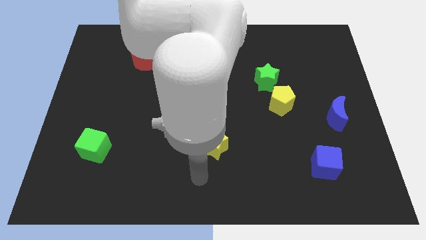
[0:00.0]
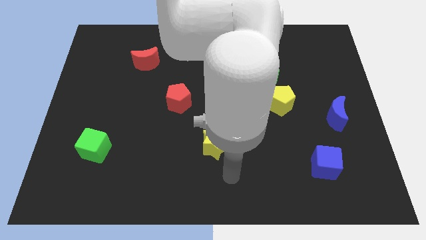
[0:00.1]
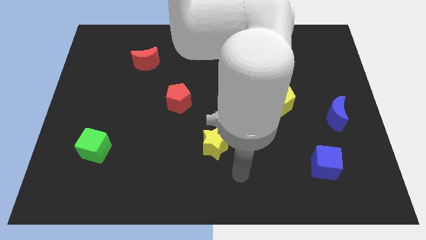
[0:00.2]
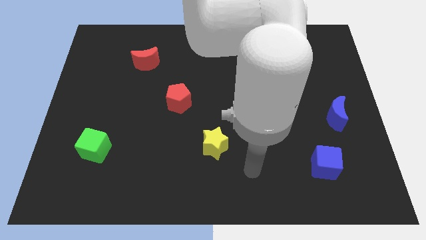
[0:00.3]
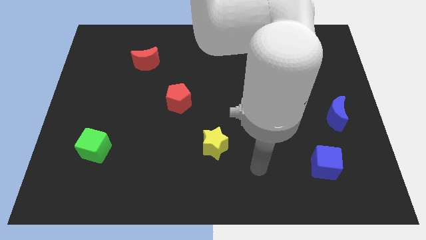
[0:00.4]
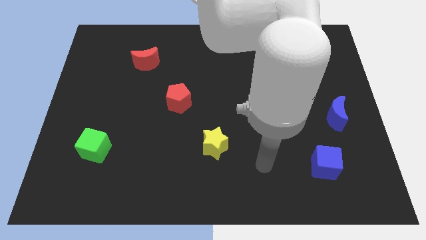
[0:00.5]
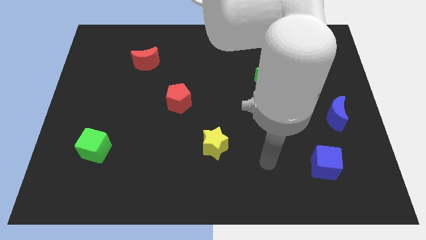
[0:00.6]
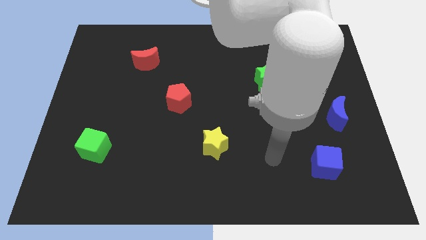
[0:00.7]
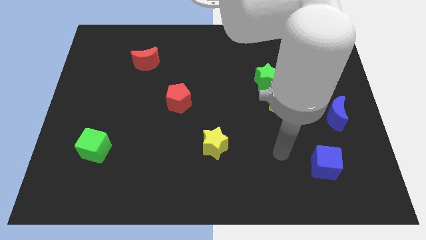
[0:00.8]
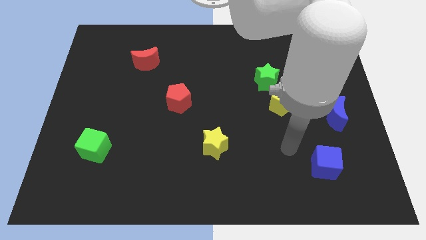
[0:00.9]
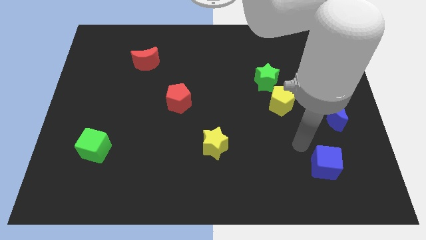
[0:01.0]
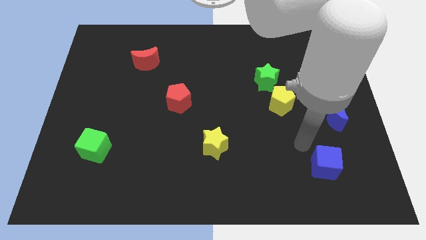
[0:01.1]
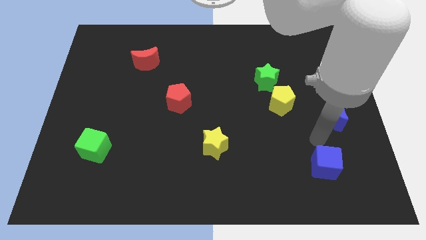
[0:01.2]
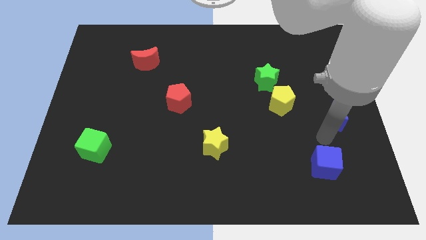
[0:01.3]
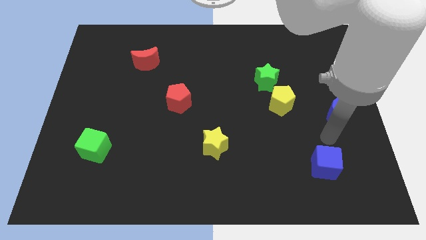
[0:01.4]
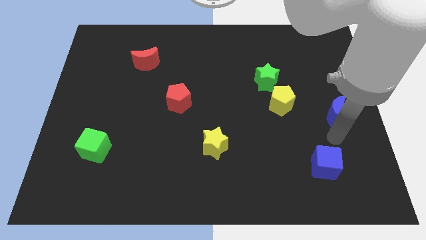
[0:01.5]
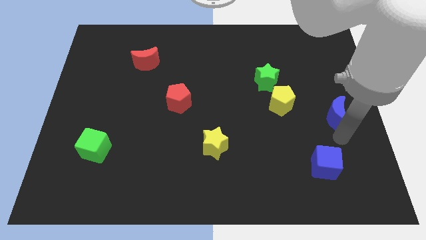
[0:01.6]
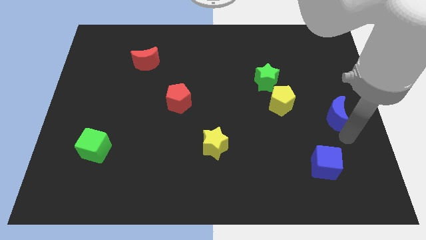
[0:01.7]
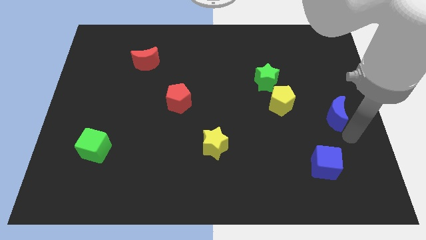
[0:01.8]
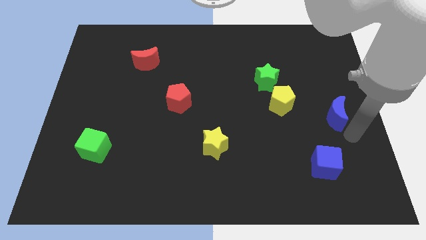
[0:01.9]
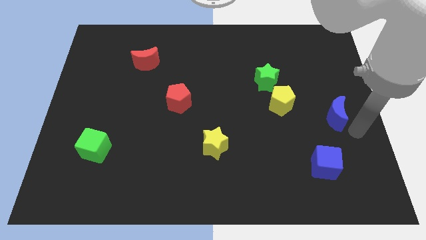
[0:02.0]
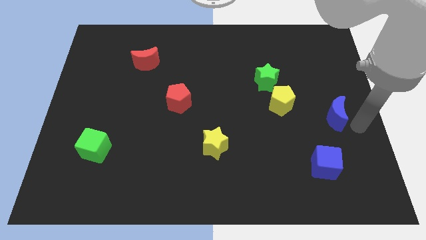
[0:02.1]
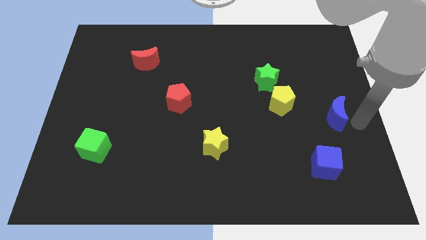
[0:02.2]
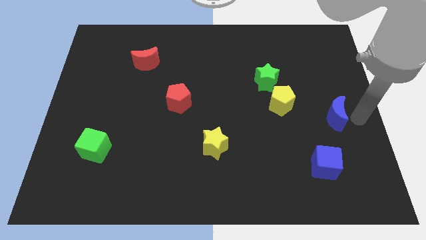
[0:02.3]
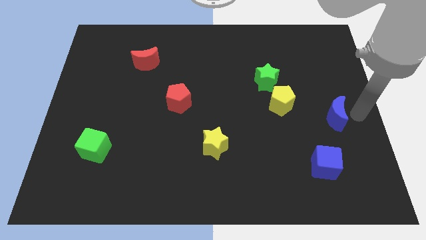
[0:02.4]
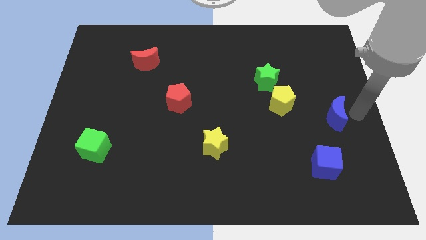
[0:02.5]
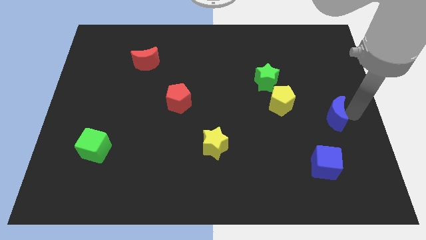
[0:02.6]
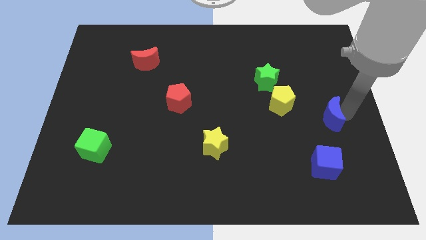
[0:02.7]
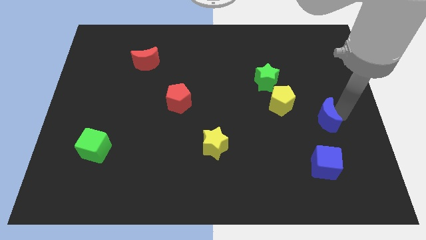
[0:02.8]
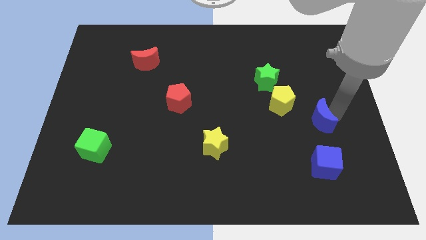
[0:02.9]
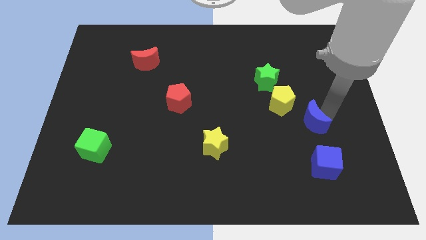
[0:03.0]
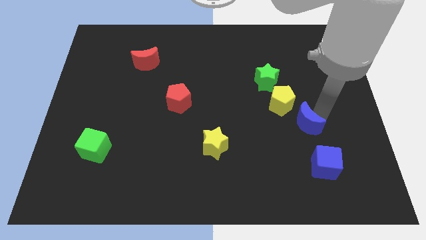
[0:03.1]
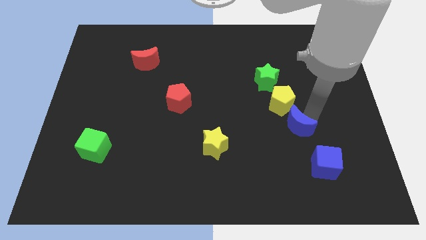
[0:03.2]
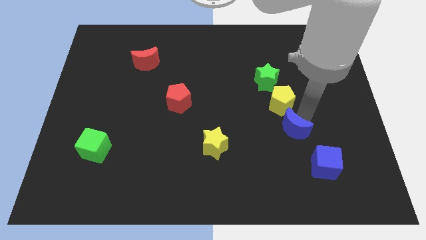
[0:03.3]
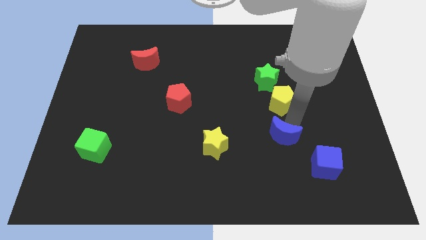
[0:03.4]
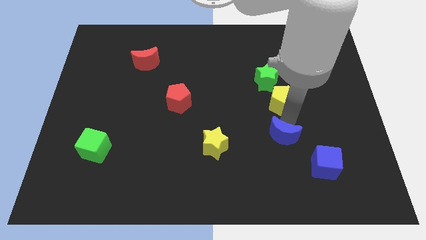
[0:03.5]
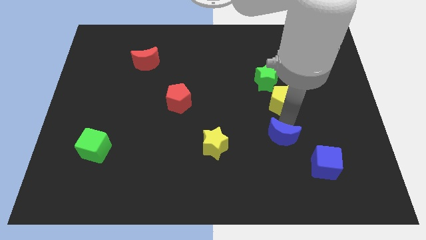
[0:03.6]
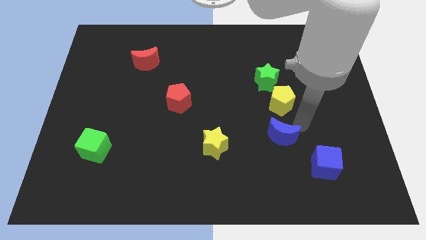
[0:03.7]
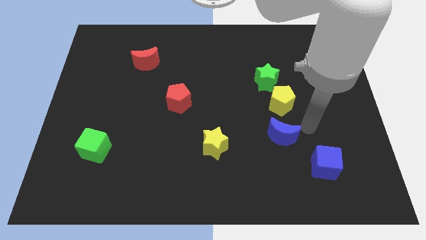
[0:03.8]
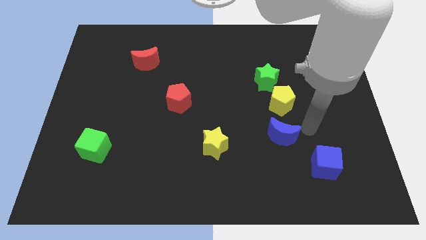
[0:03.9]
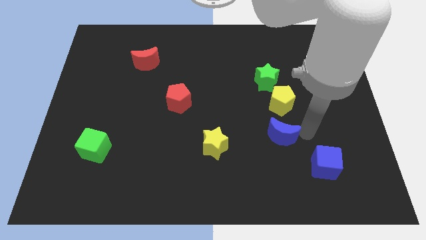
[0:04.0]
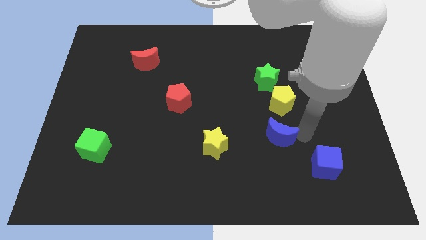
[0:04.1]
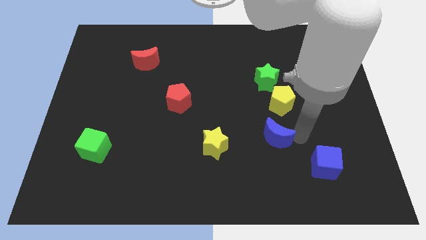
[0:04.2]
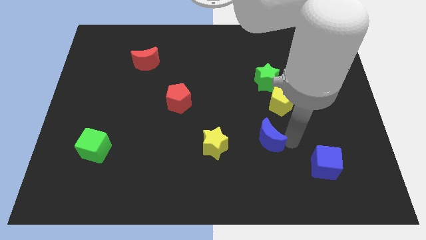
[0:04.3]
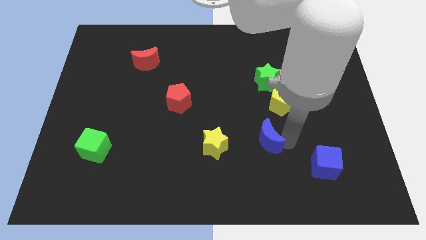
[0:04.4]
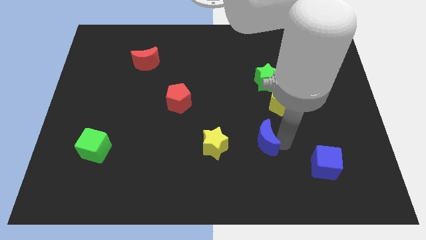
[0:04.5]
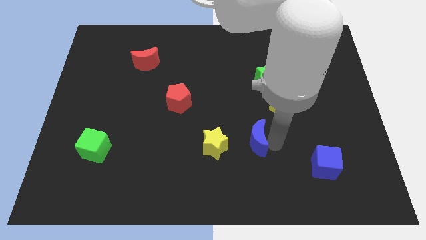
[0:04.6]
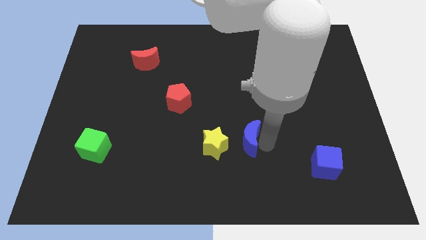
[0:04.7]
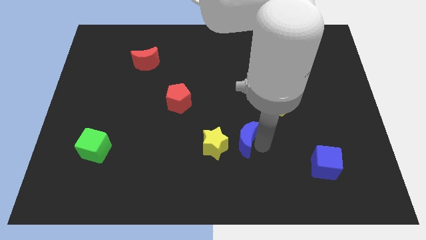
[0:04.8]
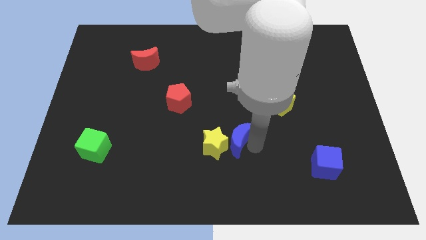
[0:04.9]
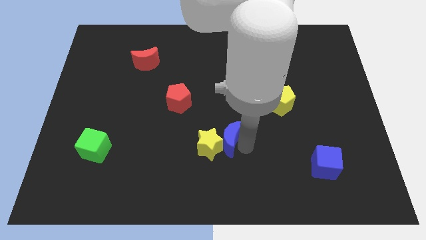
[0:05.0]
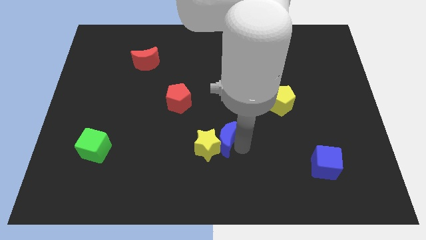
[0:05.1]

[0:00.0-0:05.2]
slide the blue moon close to the yellow star

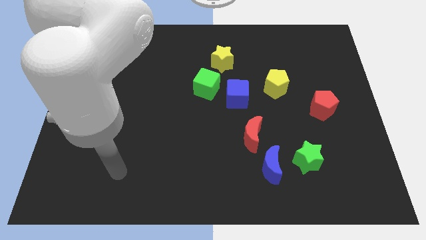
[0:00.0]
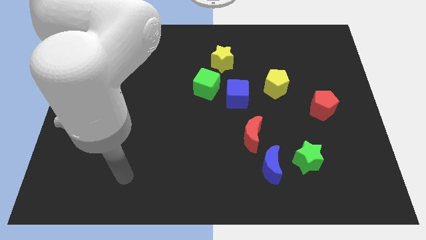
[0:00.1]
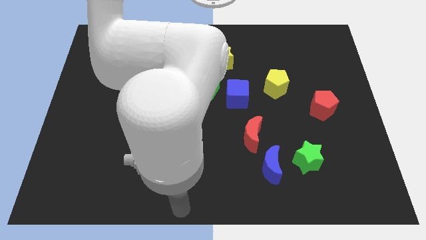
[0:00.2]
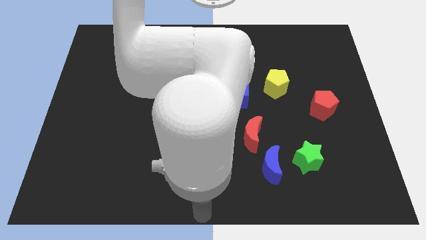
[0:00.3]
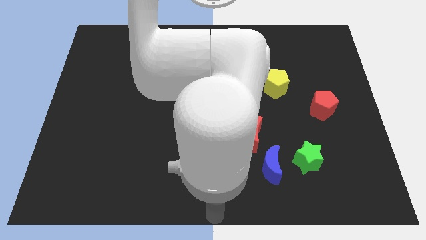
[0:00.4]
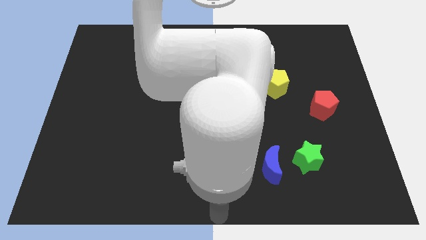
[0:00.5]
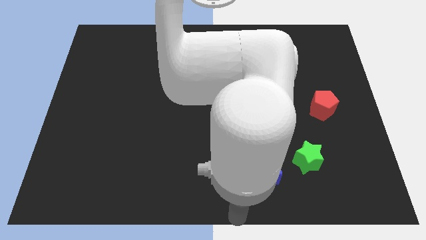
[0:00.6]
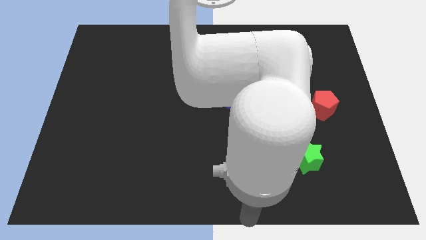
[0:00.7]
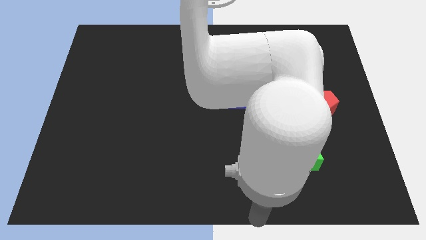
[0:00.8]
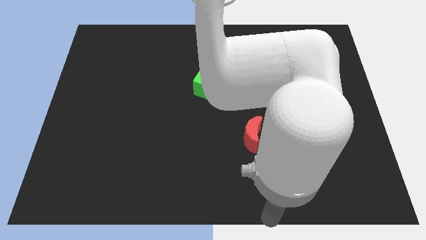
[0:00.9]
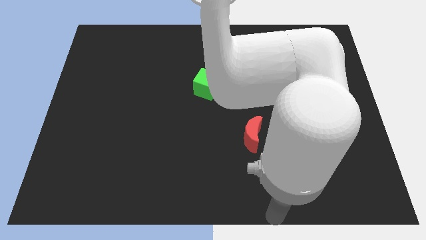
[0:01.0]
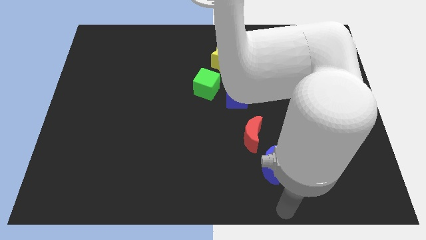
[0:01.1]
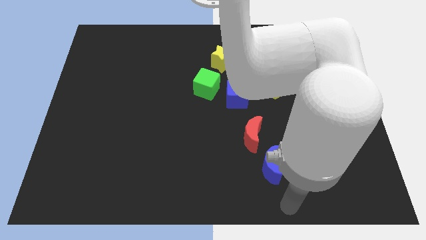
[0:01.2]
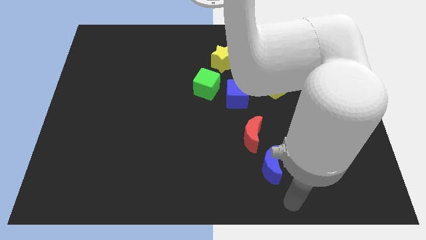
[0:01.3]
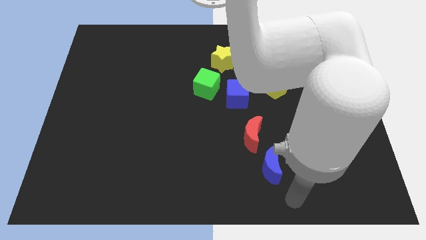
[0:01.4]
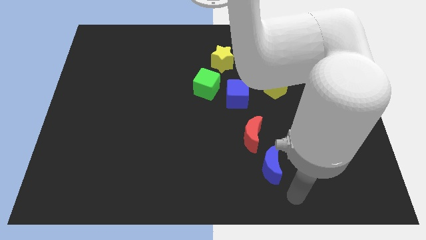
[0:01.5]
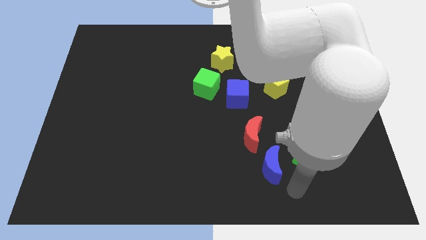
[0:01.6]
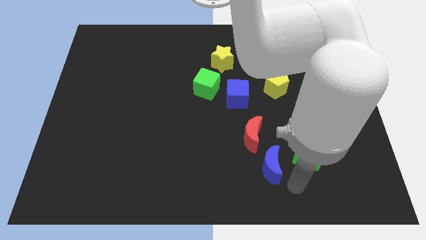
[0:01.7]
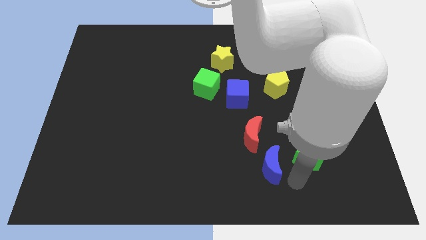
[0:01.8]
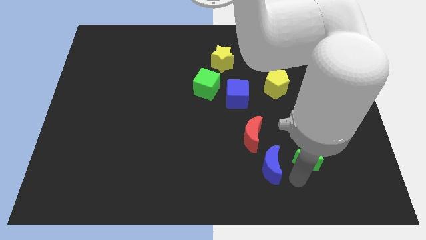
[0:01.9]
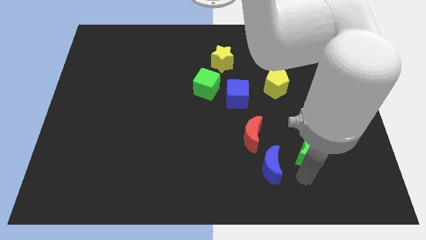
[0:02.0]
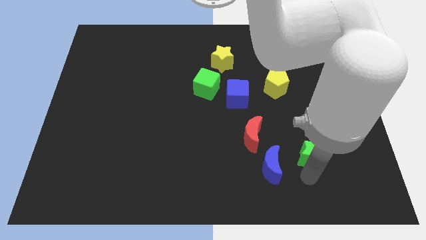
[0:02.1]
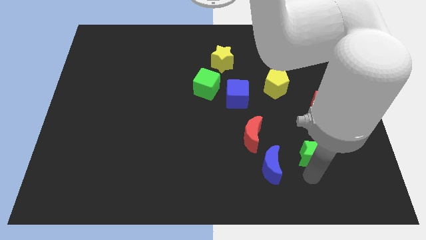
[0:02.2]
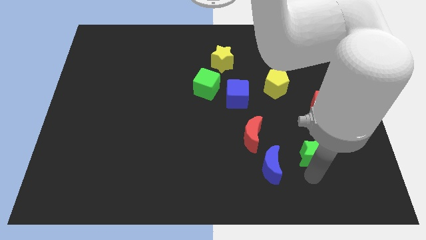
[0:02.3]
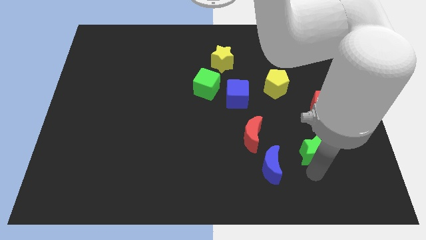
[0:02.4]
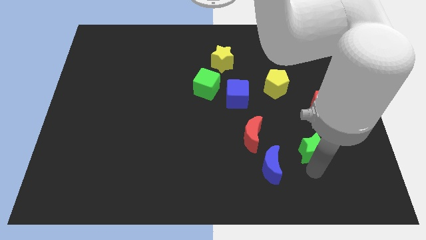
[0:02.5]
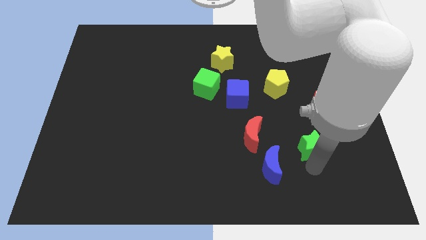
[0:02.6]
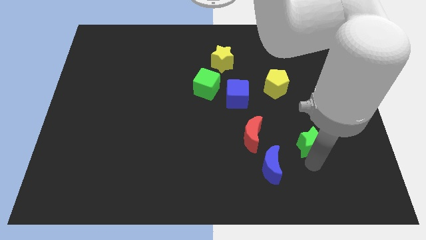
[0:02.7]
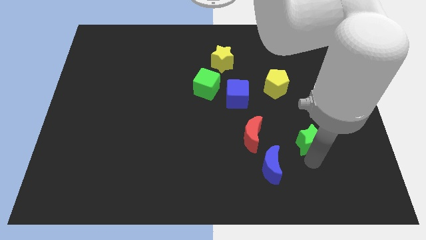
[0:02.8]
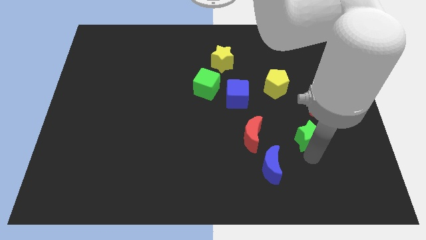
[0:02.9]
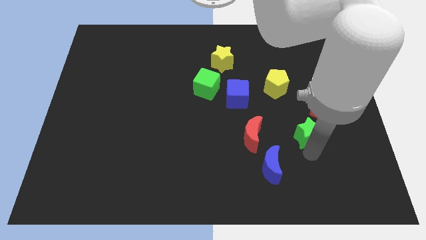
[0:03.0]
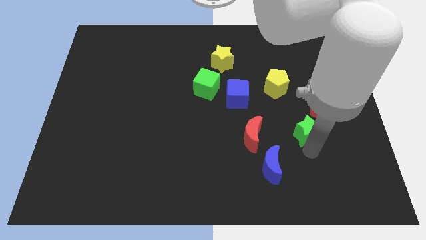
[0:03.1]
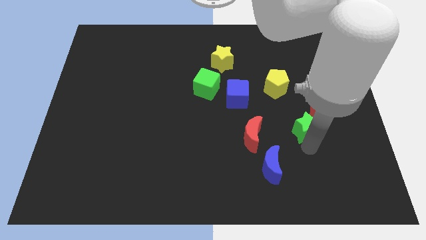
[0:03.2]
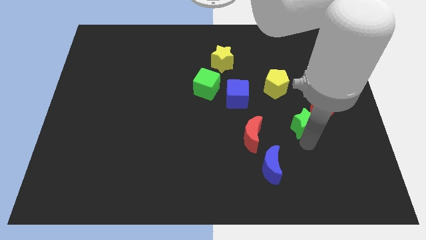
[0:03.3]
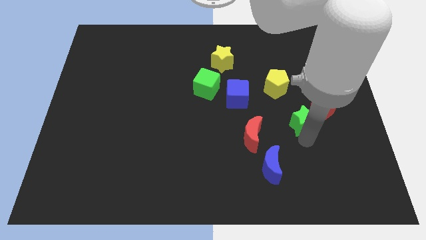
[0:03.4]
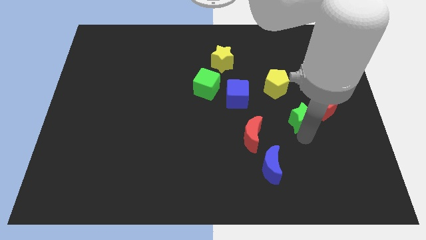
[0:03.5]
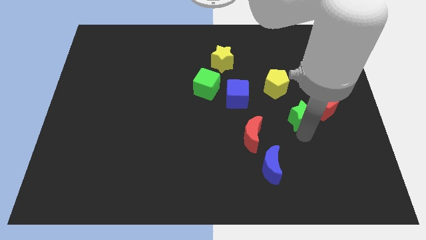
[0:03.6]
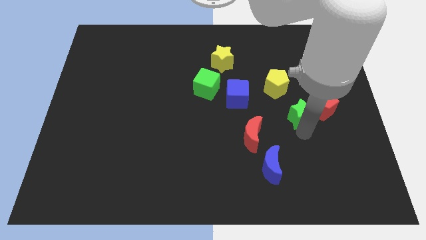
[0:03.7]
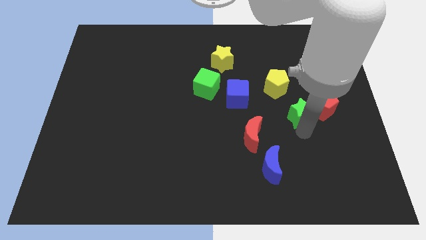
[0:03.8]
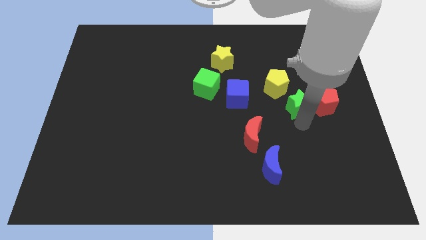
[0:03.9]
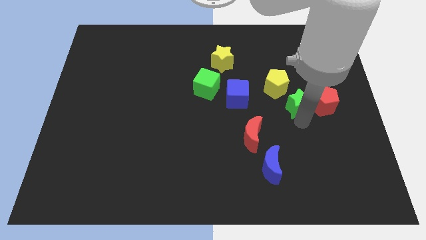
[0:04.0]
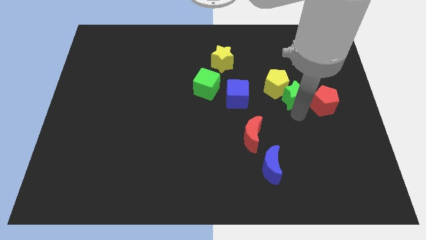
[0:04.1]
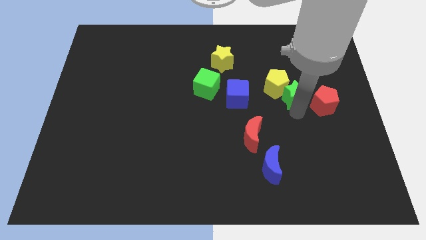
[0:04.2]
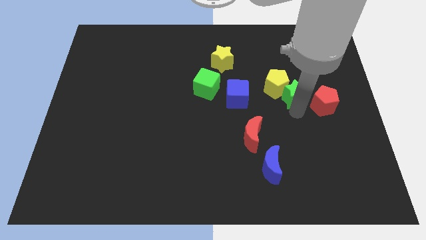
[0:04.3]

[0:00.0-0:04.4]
put the green star to the yellow pentagon
